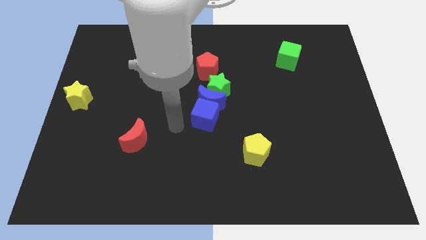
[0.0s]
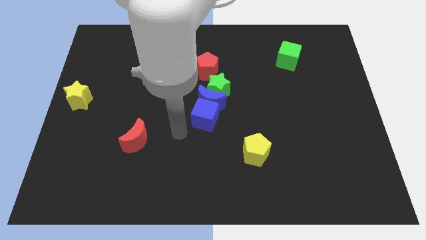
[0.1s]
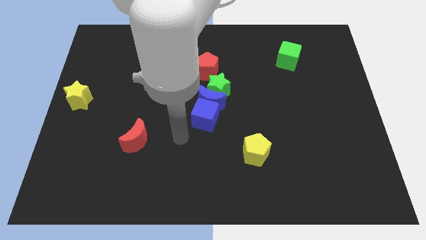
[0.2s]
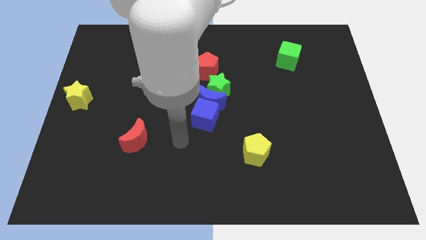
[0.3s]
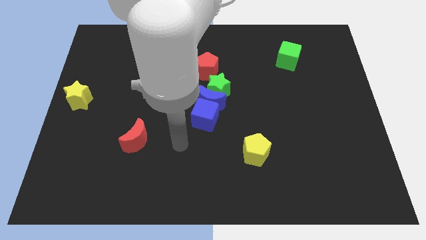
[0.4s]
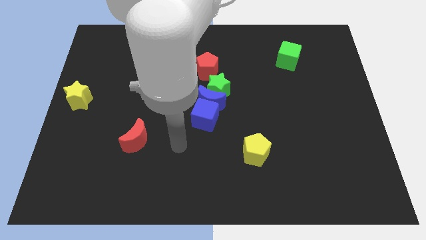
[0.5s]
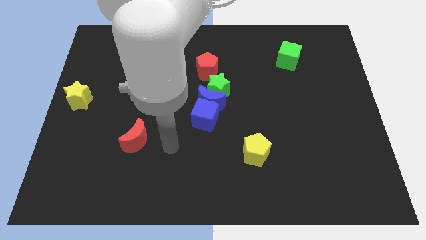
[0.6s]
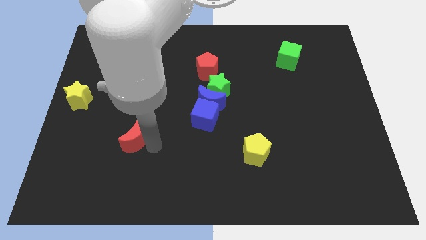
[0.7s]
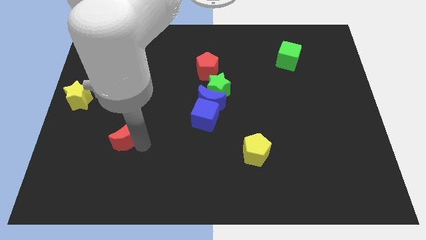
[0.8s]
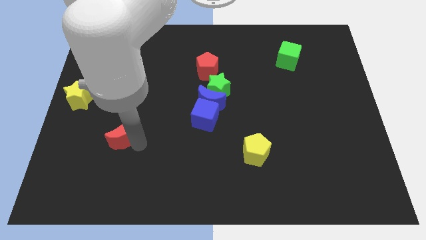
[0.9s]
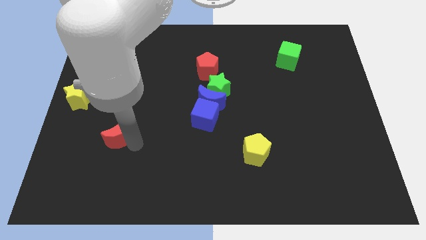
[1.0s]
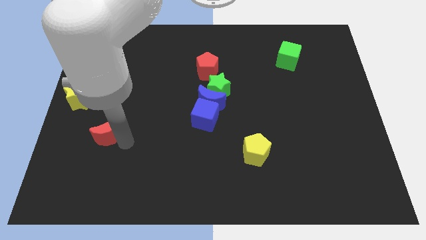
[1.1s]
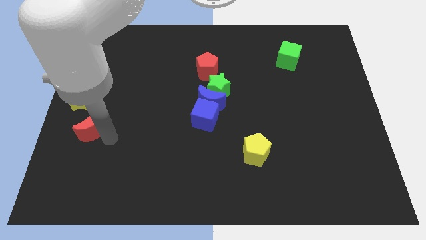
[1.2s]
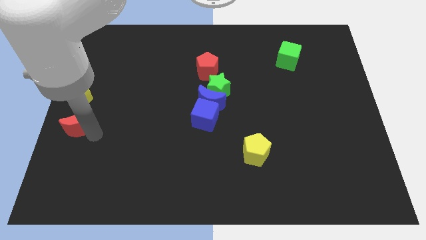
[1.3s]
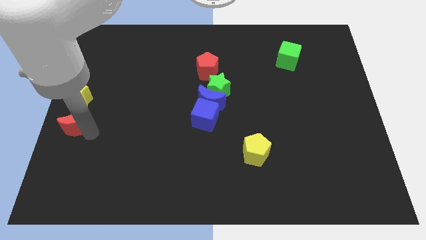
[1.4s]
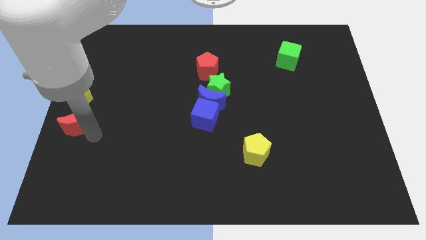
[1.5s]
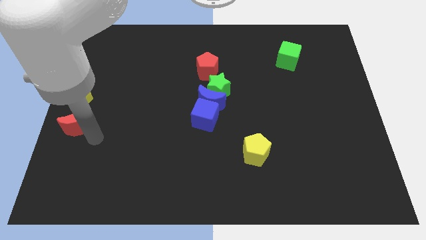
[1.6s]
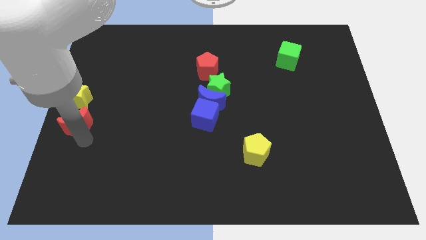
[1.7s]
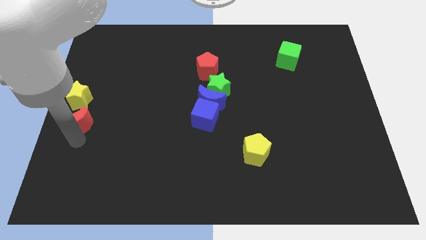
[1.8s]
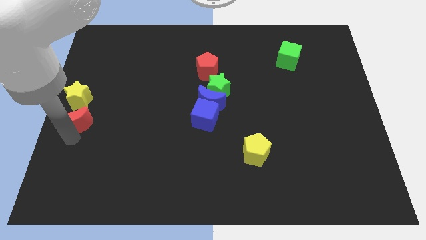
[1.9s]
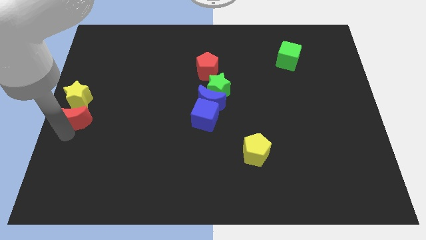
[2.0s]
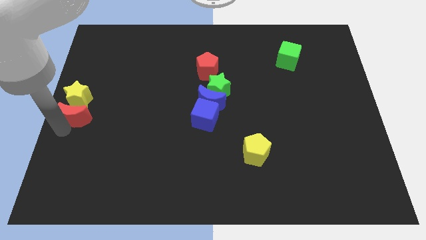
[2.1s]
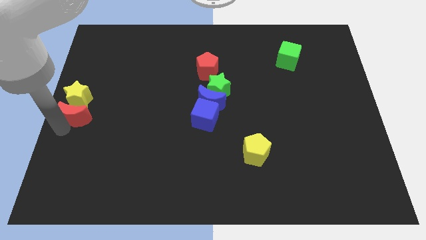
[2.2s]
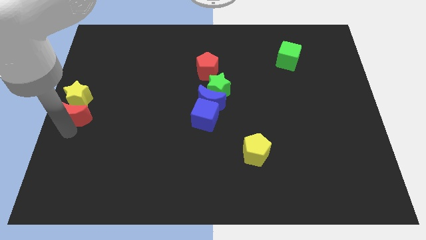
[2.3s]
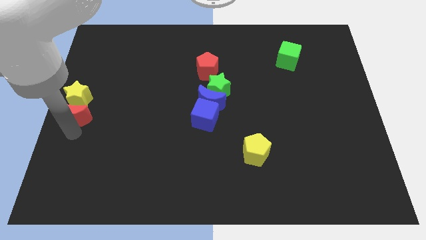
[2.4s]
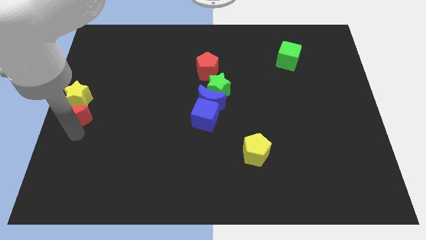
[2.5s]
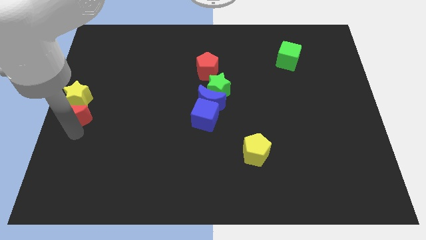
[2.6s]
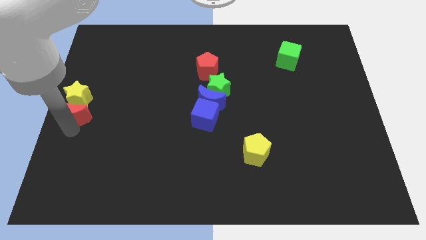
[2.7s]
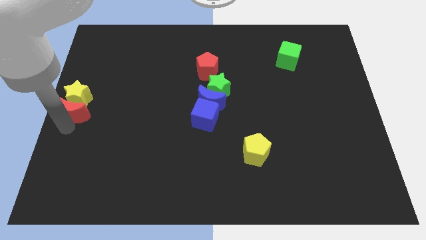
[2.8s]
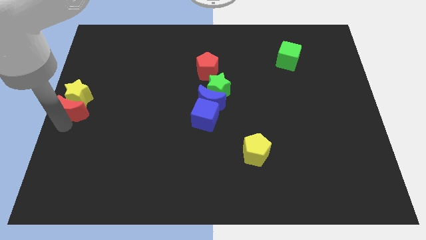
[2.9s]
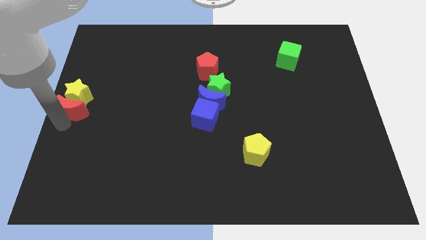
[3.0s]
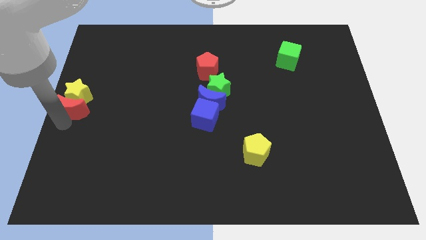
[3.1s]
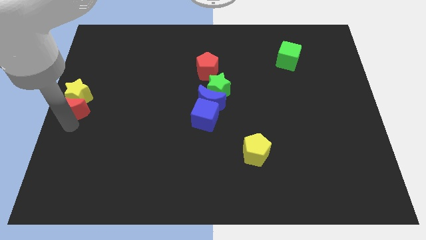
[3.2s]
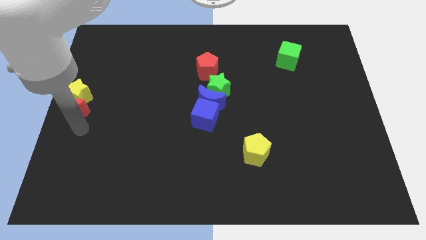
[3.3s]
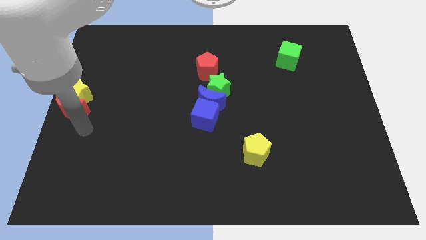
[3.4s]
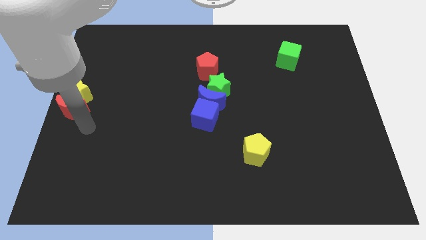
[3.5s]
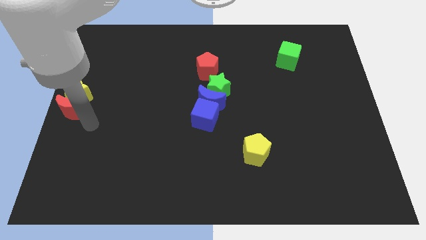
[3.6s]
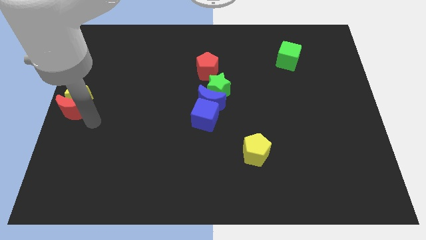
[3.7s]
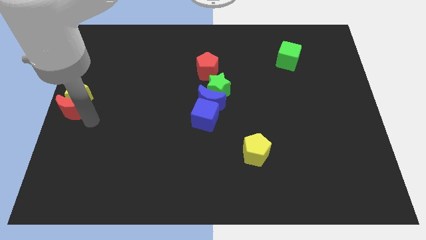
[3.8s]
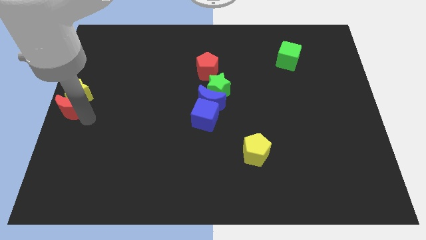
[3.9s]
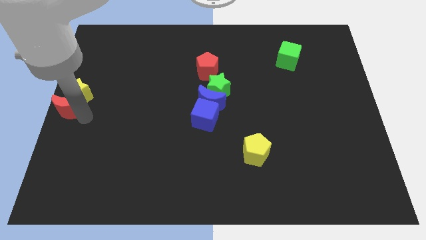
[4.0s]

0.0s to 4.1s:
place the red crescent close to the yellow star

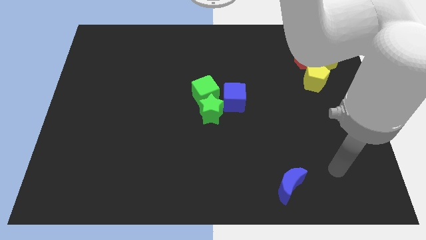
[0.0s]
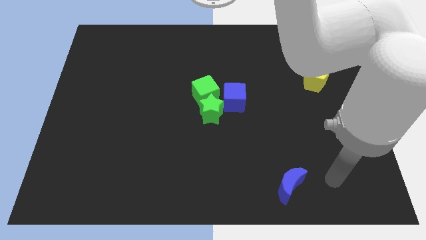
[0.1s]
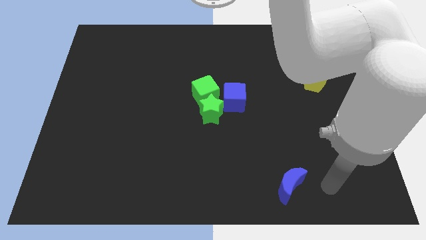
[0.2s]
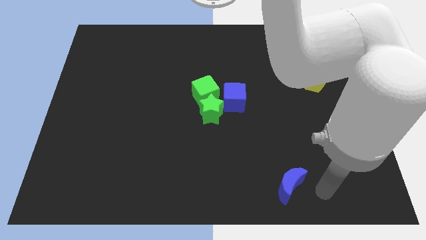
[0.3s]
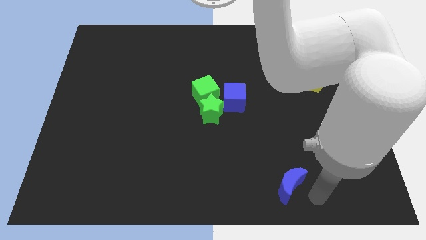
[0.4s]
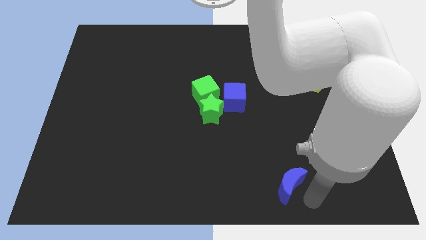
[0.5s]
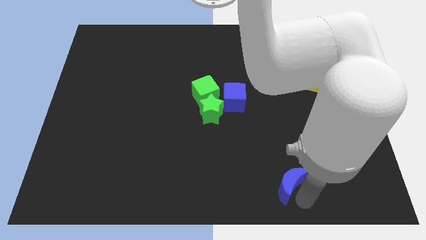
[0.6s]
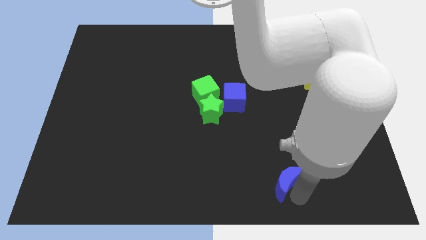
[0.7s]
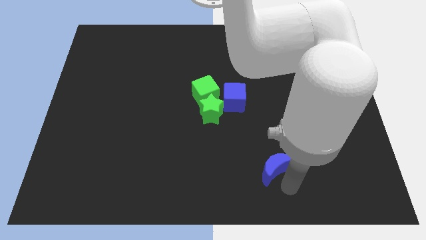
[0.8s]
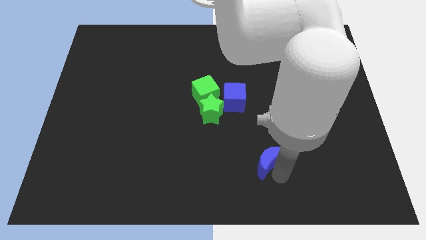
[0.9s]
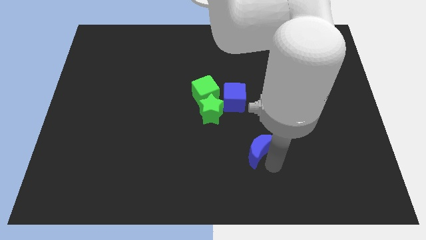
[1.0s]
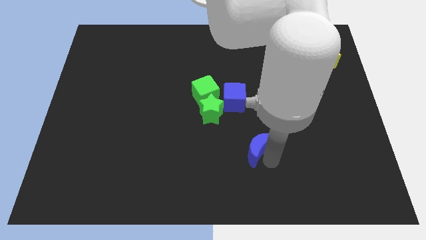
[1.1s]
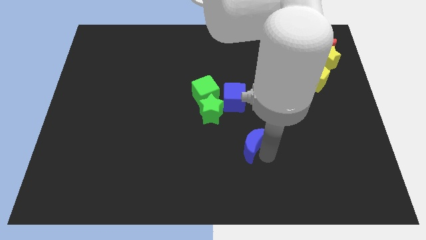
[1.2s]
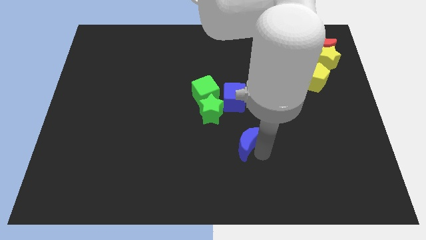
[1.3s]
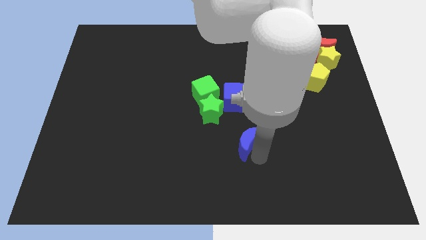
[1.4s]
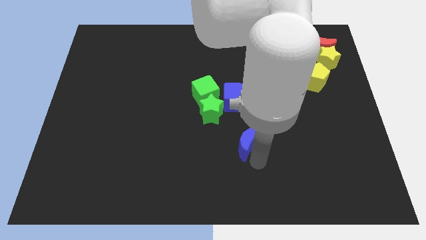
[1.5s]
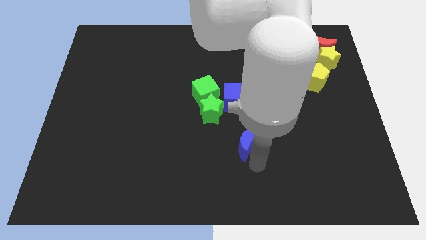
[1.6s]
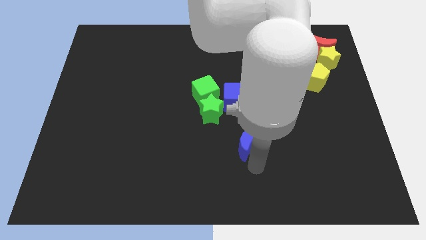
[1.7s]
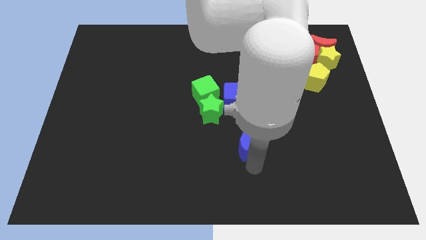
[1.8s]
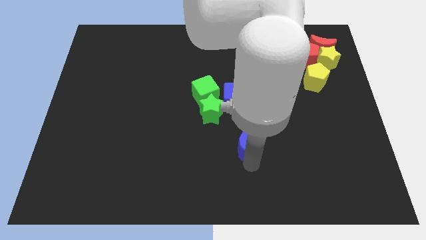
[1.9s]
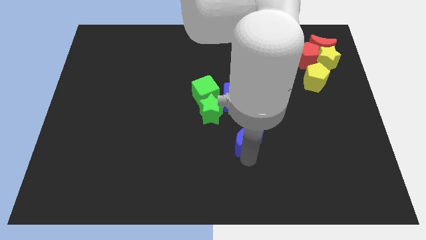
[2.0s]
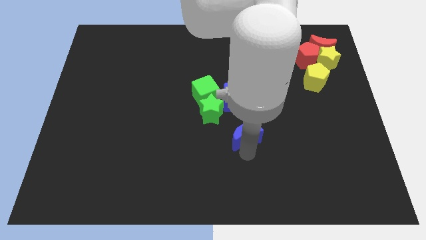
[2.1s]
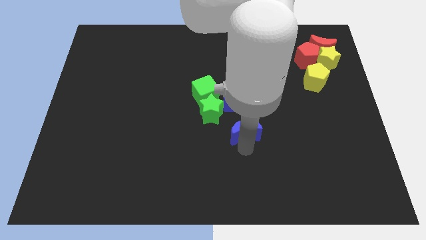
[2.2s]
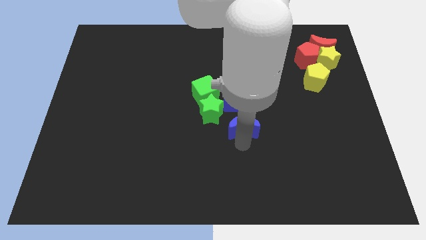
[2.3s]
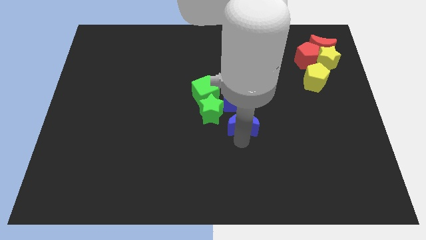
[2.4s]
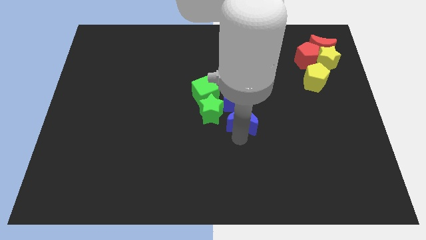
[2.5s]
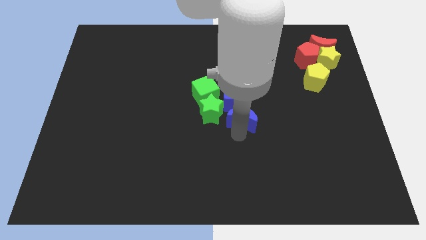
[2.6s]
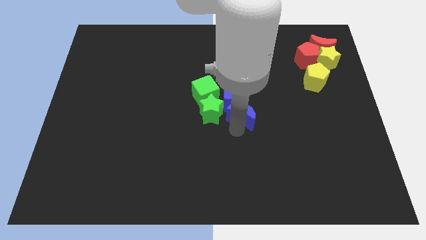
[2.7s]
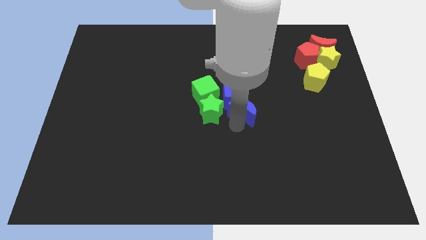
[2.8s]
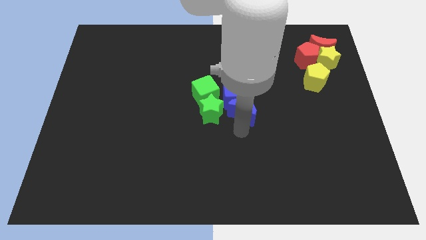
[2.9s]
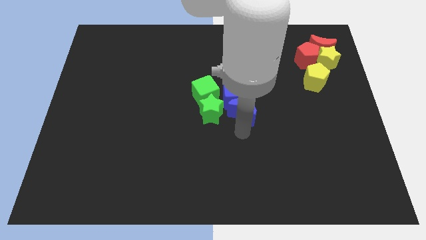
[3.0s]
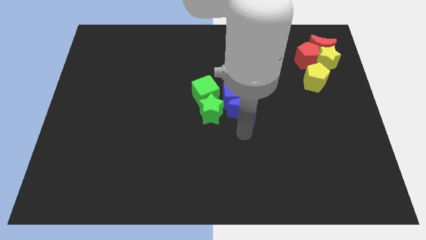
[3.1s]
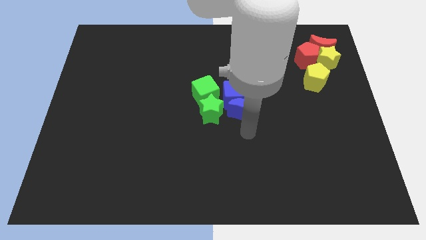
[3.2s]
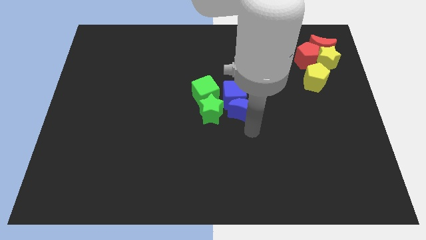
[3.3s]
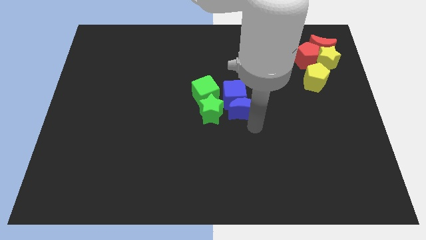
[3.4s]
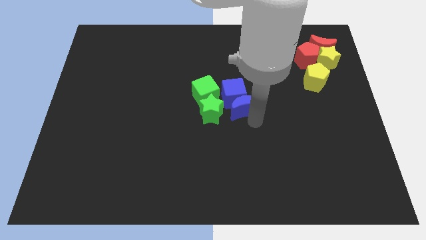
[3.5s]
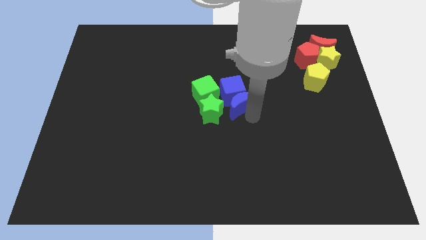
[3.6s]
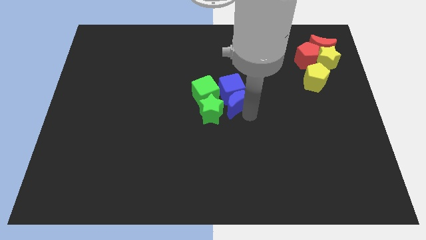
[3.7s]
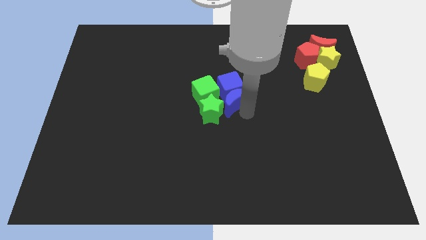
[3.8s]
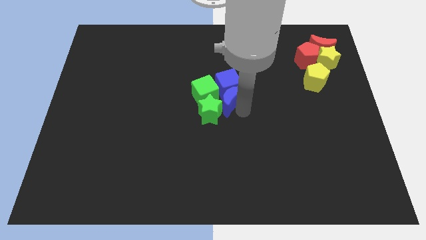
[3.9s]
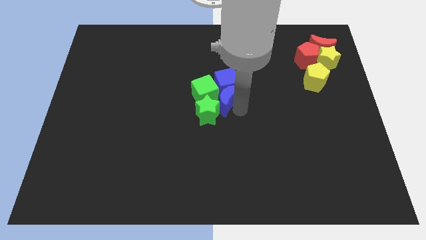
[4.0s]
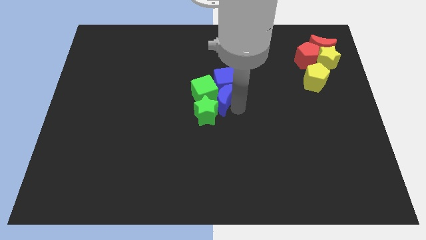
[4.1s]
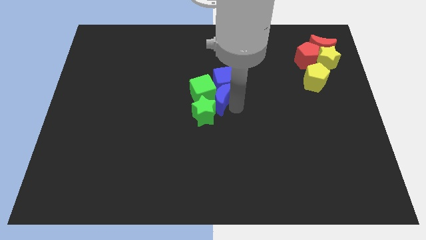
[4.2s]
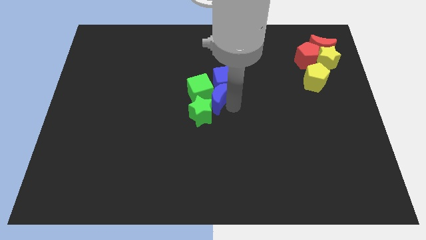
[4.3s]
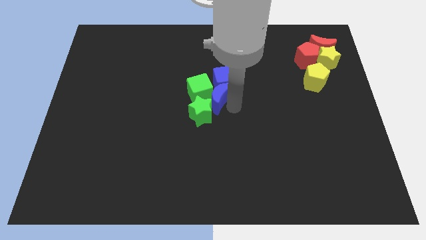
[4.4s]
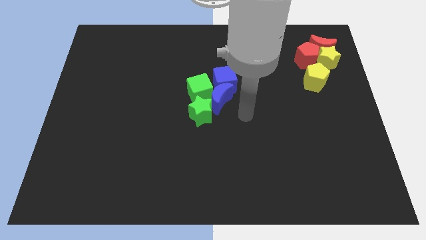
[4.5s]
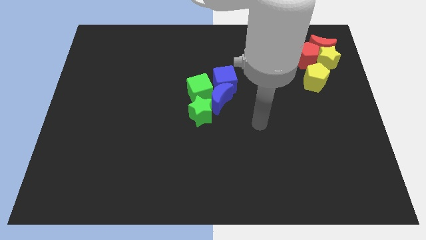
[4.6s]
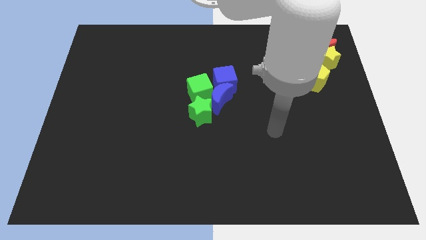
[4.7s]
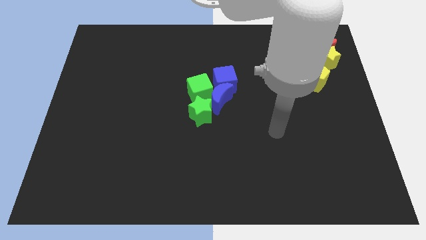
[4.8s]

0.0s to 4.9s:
move blue moon close to blue cube
